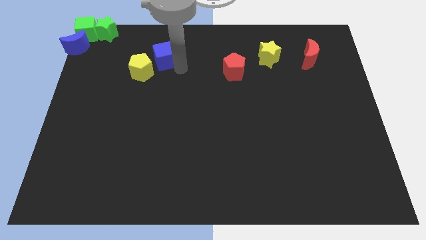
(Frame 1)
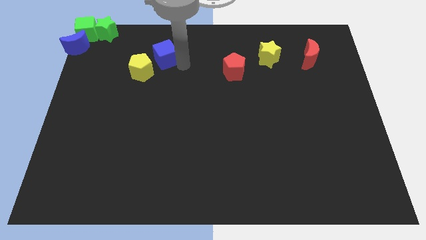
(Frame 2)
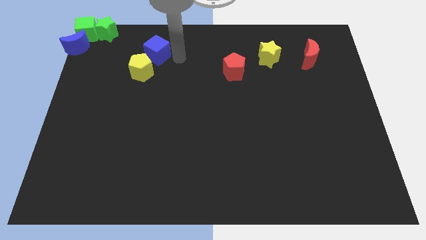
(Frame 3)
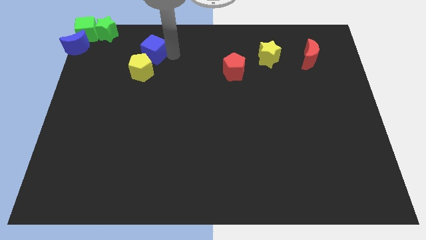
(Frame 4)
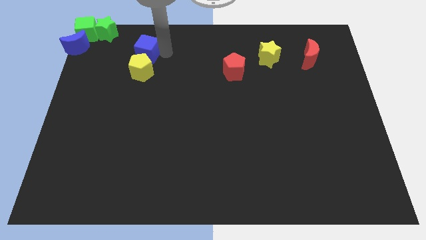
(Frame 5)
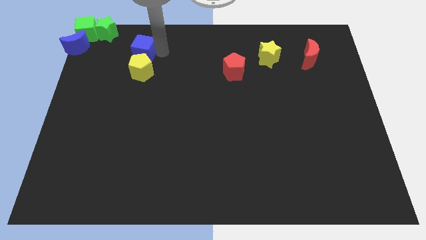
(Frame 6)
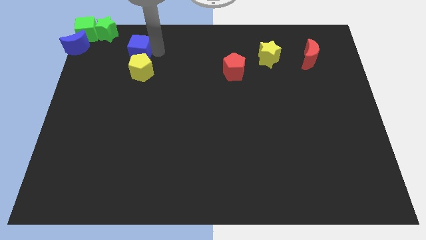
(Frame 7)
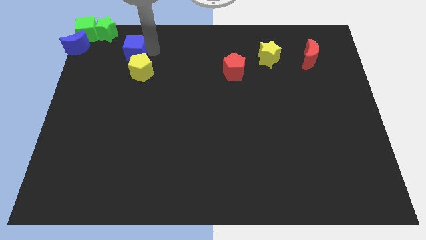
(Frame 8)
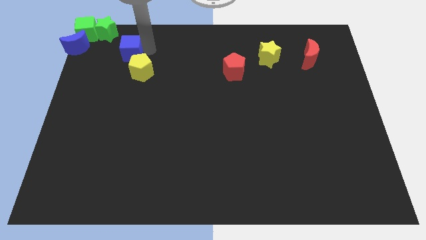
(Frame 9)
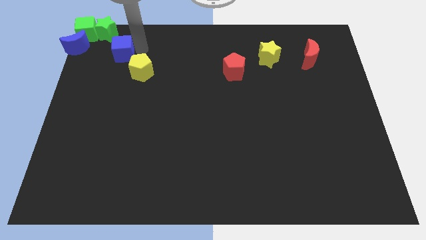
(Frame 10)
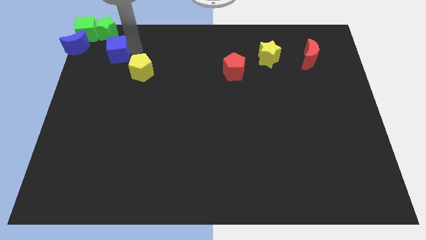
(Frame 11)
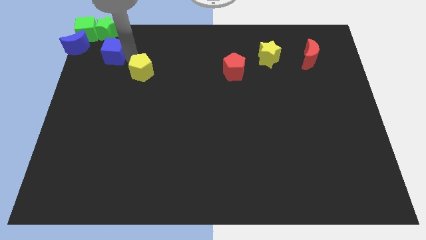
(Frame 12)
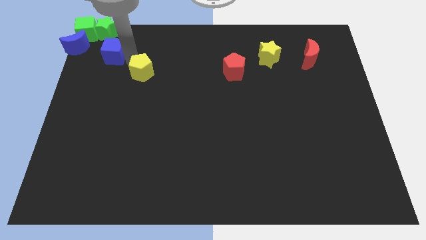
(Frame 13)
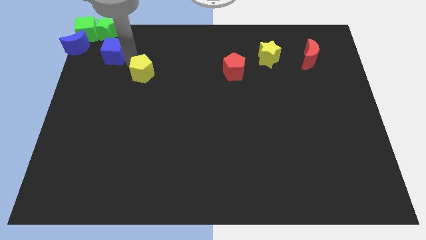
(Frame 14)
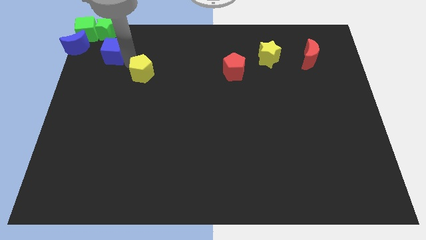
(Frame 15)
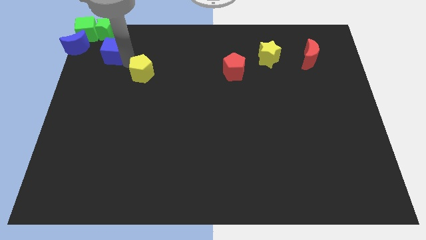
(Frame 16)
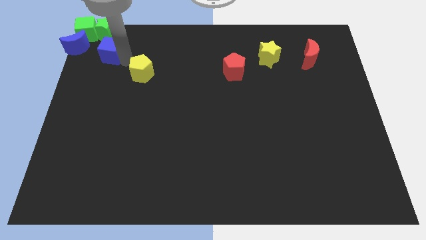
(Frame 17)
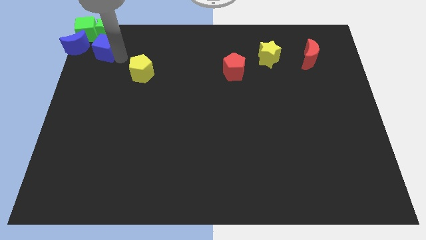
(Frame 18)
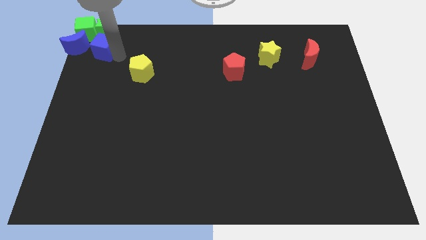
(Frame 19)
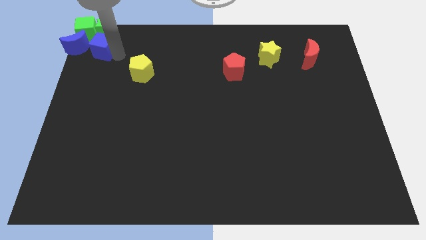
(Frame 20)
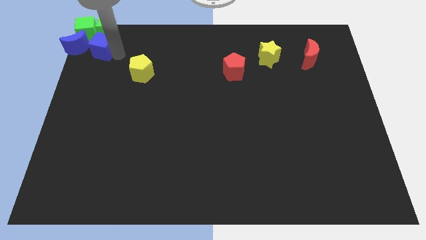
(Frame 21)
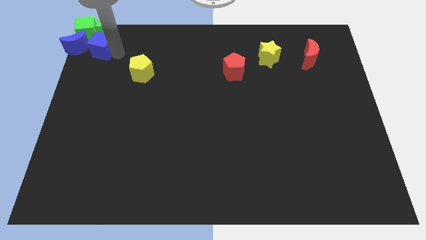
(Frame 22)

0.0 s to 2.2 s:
place blue cube close to blue moon

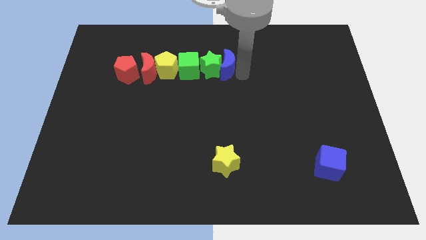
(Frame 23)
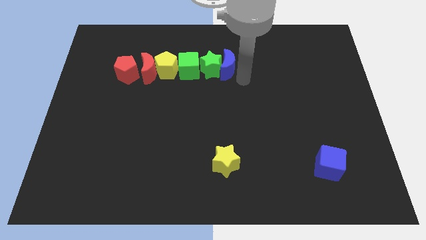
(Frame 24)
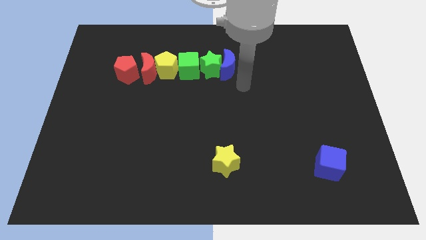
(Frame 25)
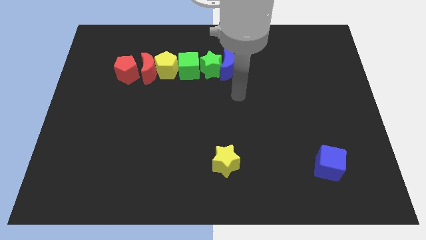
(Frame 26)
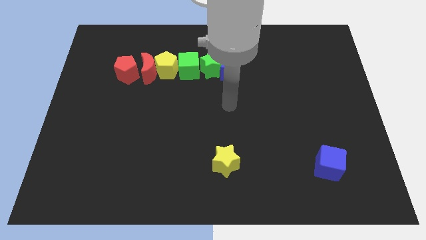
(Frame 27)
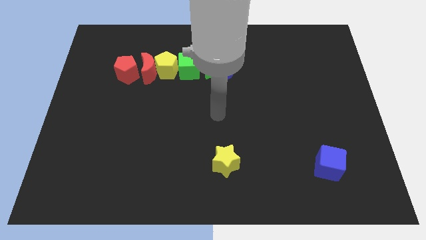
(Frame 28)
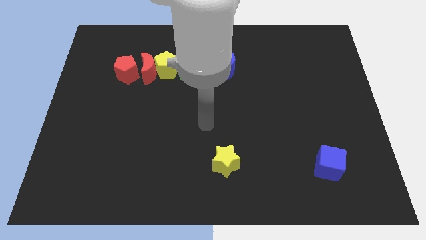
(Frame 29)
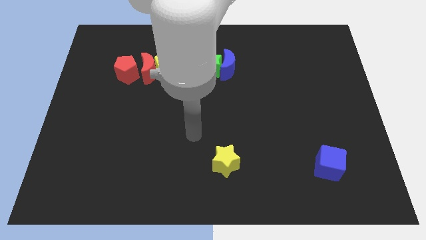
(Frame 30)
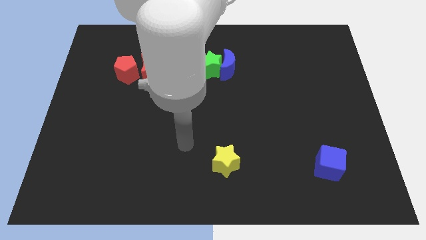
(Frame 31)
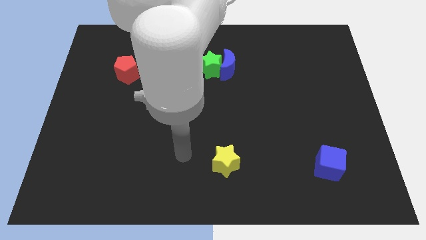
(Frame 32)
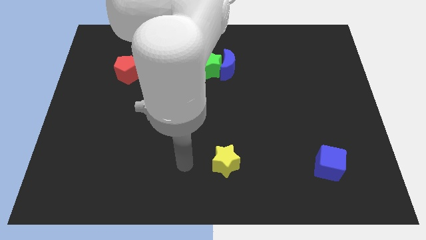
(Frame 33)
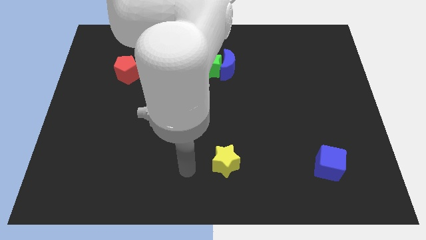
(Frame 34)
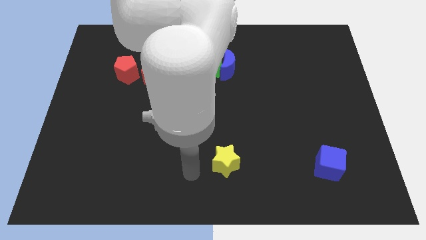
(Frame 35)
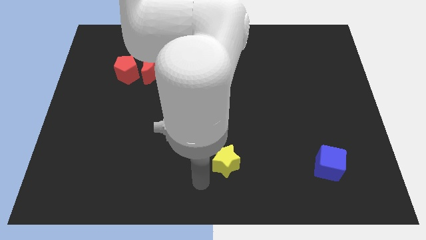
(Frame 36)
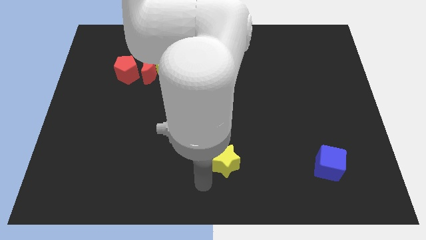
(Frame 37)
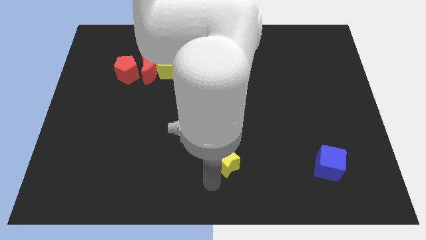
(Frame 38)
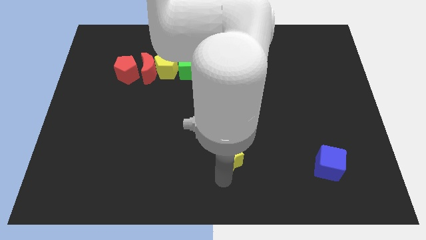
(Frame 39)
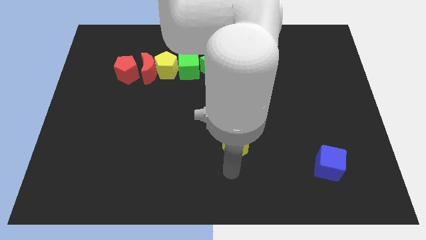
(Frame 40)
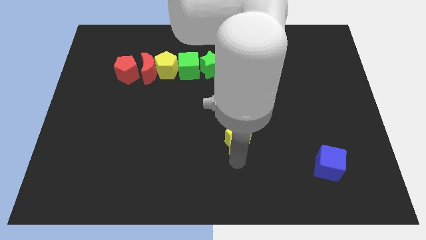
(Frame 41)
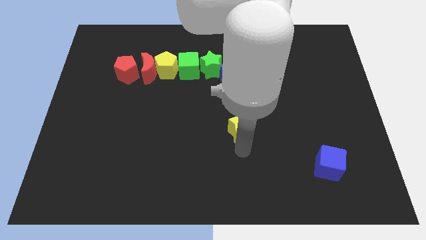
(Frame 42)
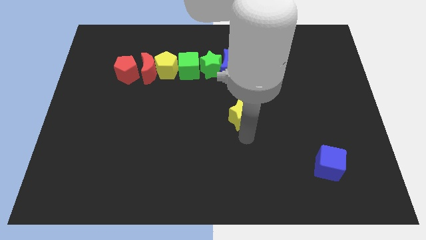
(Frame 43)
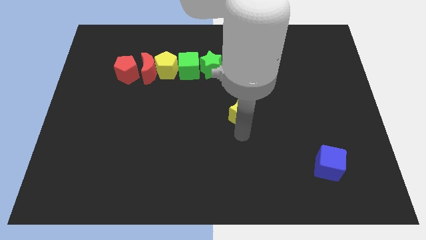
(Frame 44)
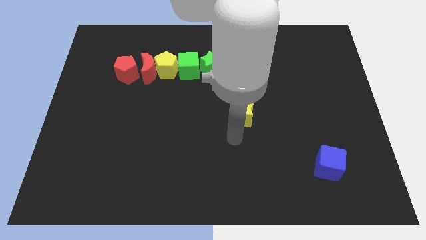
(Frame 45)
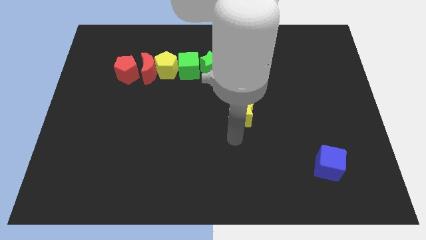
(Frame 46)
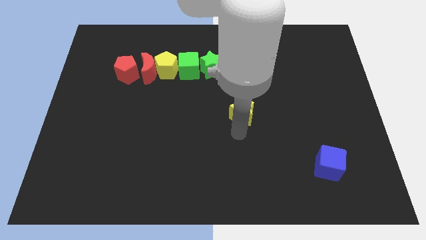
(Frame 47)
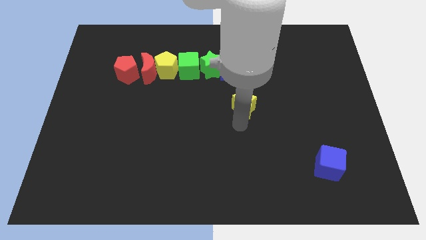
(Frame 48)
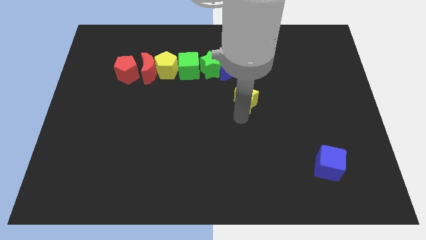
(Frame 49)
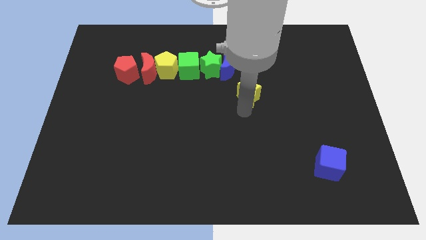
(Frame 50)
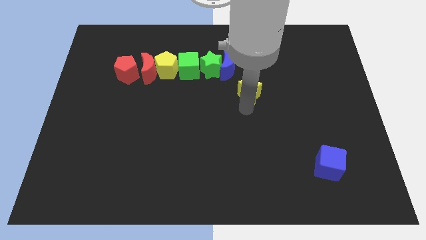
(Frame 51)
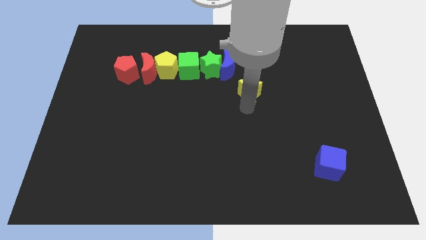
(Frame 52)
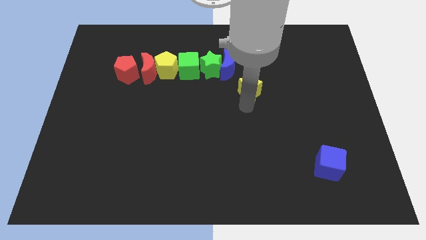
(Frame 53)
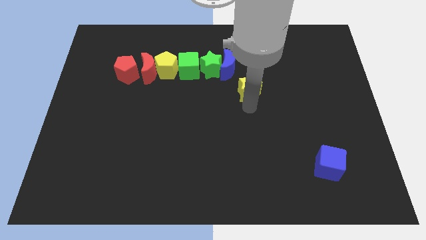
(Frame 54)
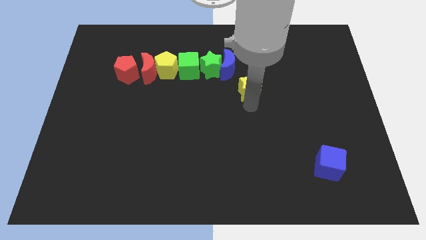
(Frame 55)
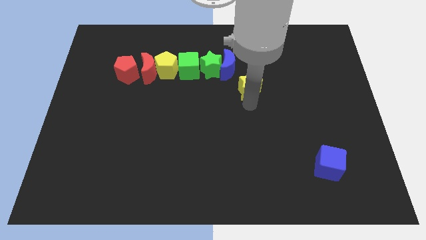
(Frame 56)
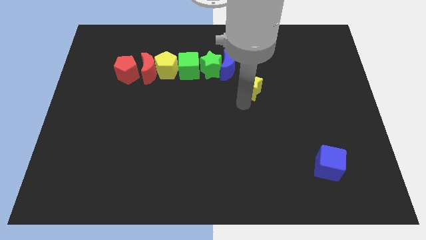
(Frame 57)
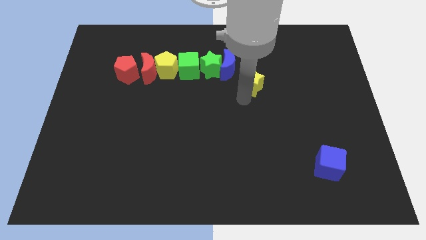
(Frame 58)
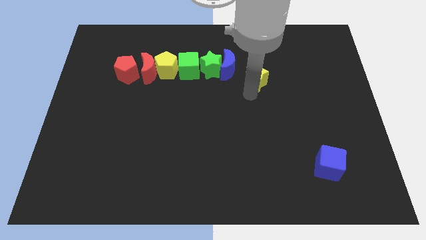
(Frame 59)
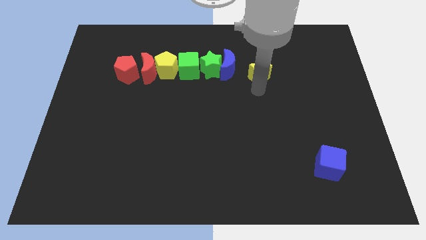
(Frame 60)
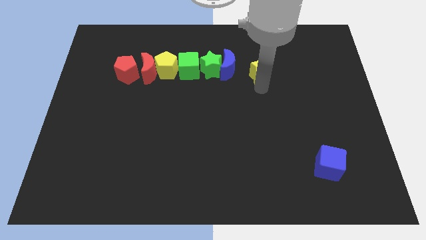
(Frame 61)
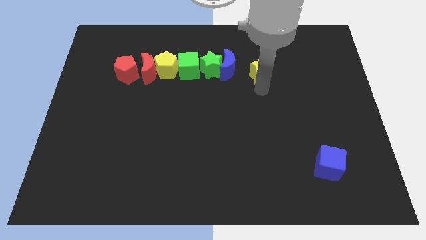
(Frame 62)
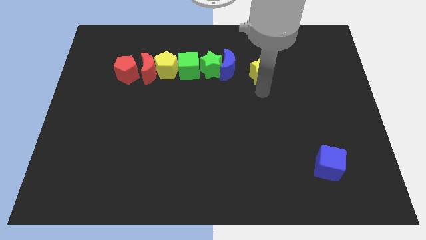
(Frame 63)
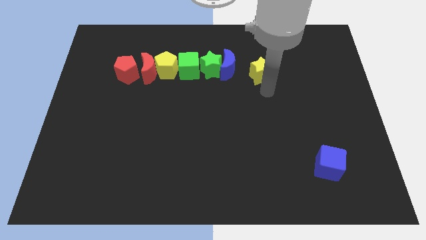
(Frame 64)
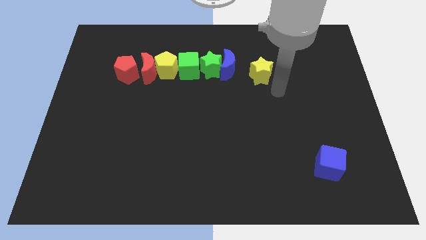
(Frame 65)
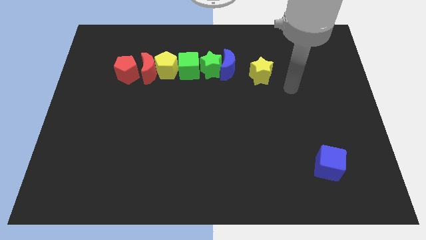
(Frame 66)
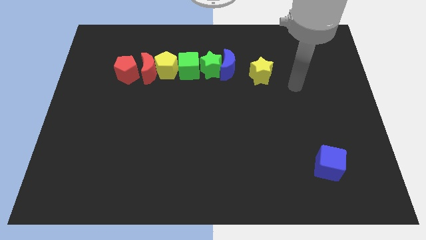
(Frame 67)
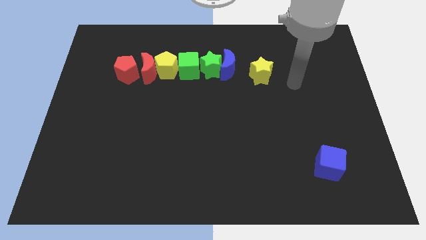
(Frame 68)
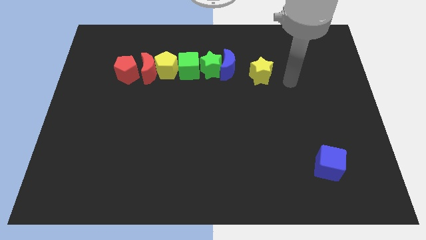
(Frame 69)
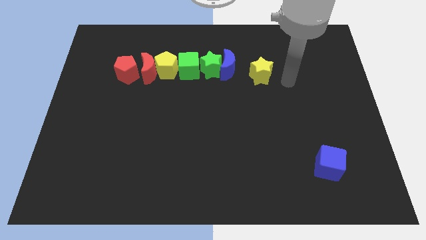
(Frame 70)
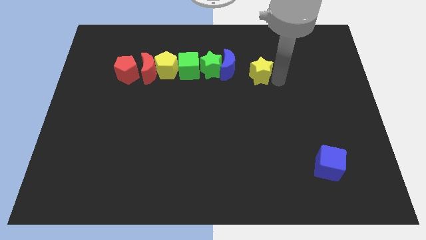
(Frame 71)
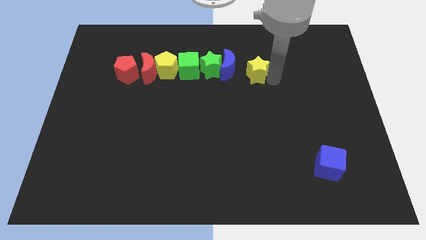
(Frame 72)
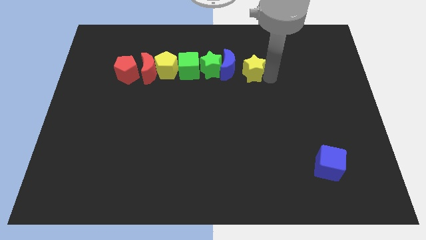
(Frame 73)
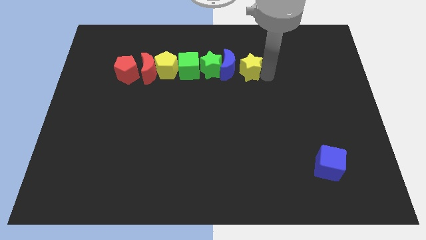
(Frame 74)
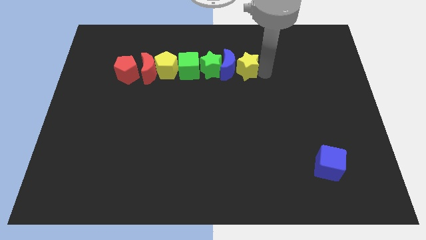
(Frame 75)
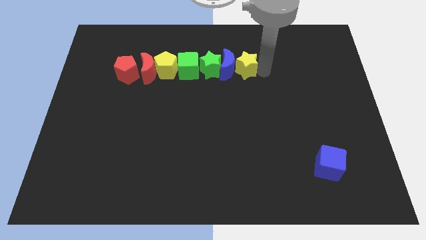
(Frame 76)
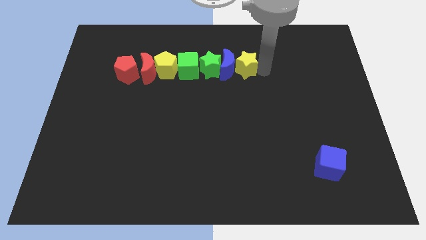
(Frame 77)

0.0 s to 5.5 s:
push the yellow star at the right side of the blue moon

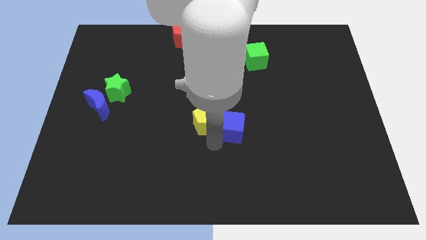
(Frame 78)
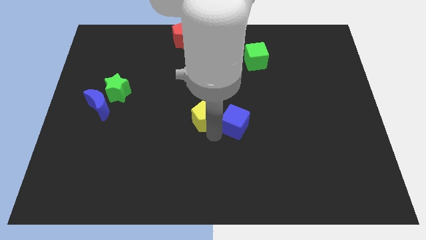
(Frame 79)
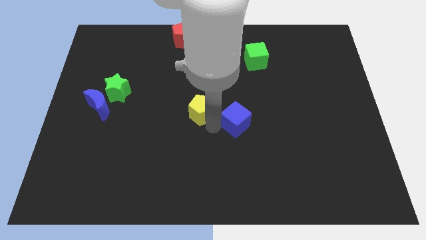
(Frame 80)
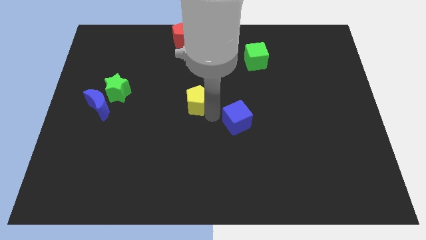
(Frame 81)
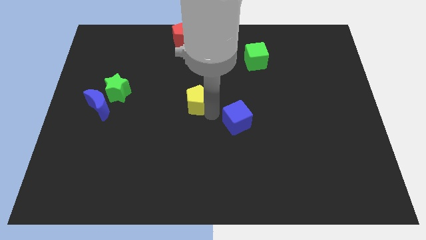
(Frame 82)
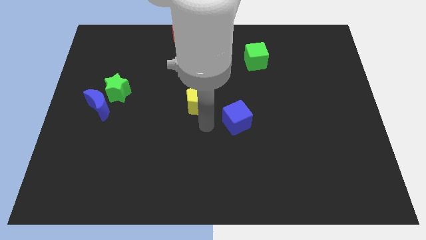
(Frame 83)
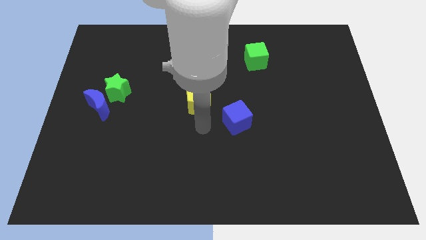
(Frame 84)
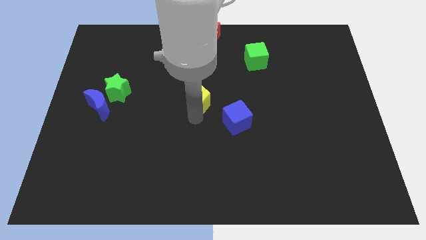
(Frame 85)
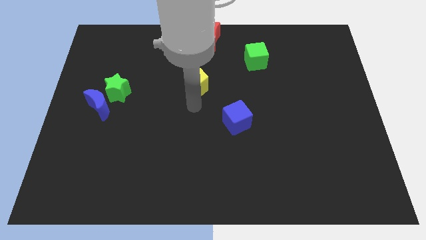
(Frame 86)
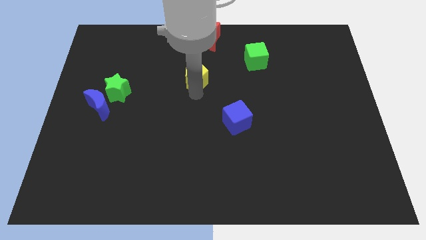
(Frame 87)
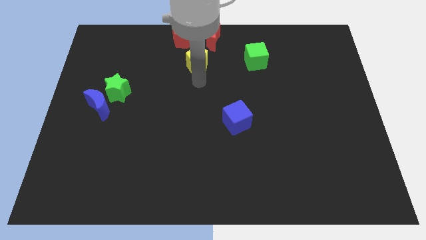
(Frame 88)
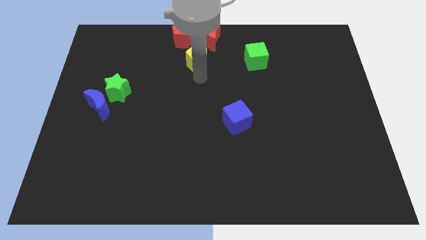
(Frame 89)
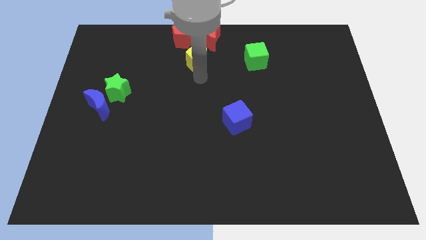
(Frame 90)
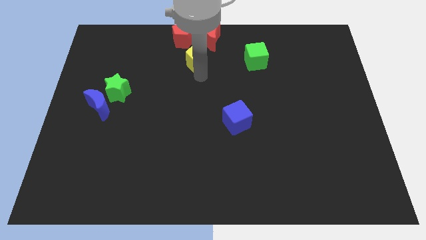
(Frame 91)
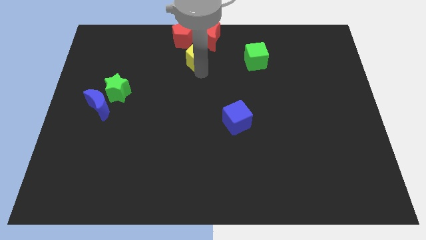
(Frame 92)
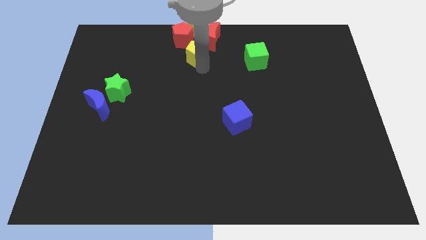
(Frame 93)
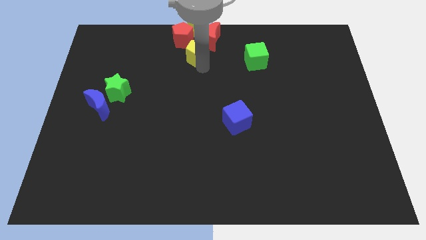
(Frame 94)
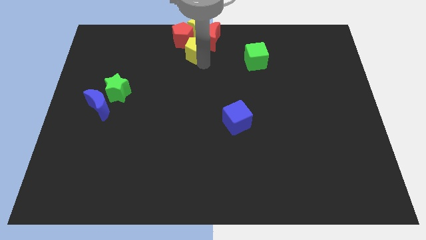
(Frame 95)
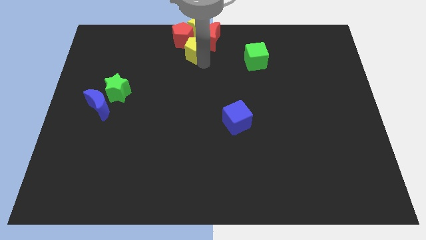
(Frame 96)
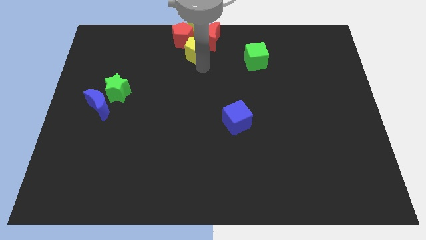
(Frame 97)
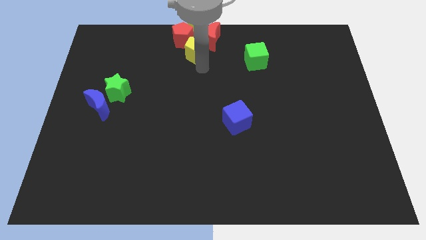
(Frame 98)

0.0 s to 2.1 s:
place the yellow pentagon into the bottom of the yellow star
